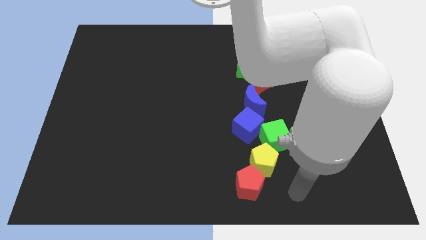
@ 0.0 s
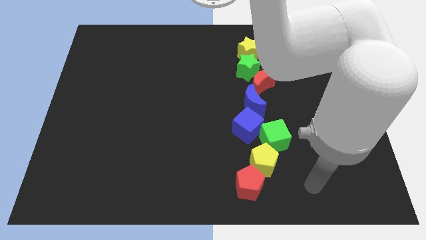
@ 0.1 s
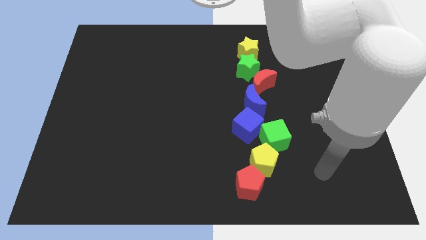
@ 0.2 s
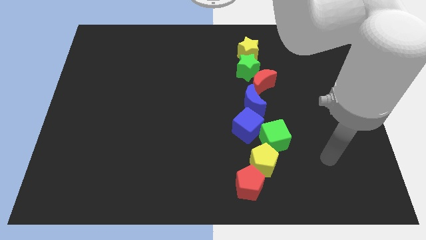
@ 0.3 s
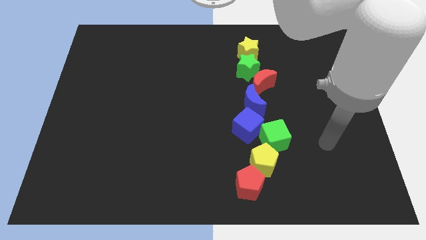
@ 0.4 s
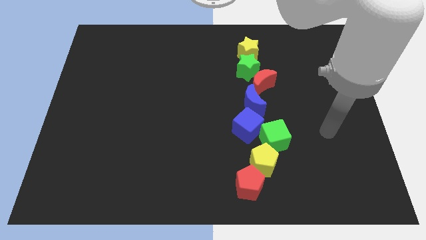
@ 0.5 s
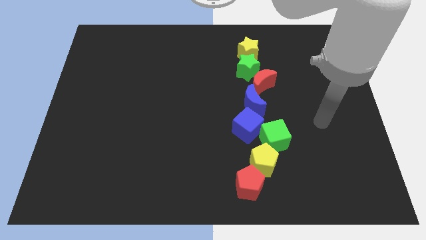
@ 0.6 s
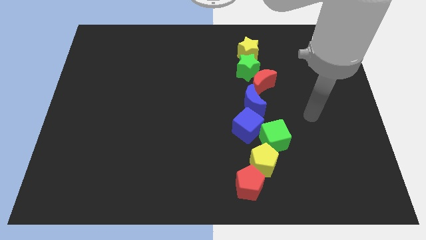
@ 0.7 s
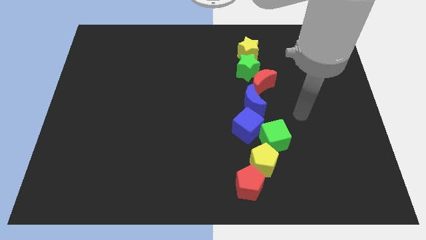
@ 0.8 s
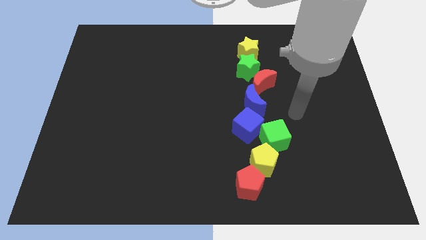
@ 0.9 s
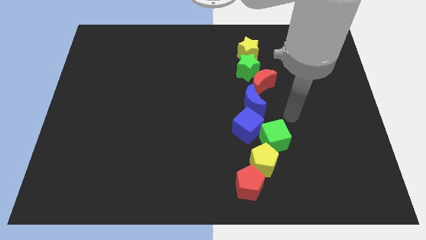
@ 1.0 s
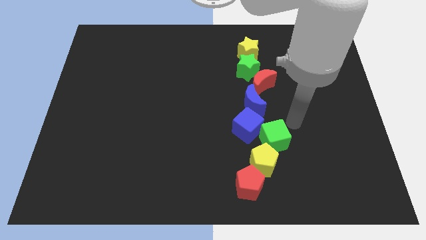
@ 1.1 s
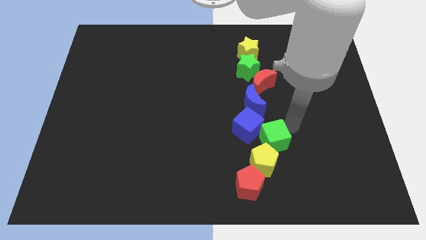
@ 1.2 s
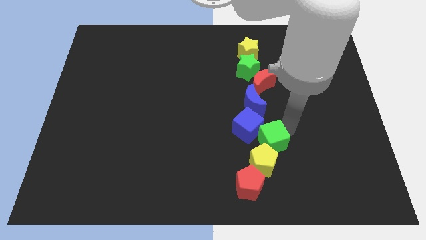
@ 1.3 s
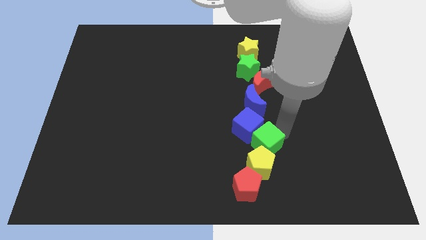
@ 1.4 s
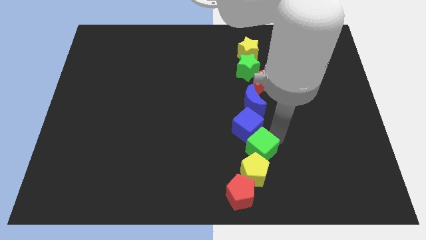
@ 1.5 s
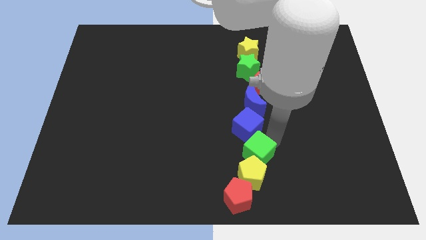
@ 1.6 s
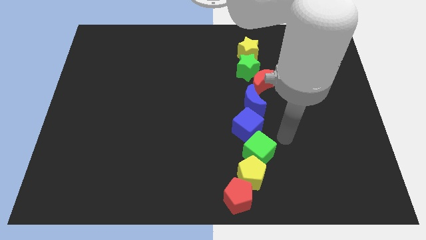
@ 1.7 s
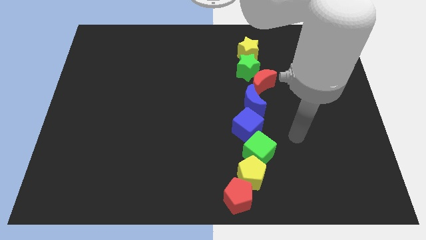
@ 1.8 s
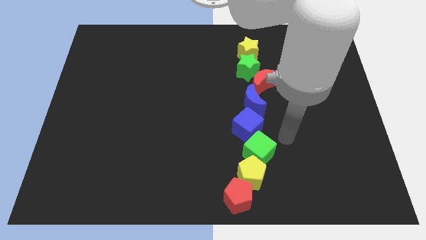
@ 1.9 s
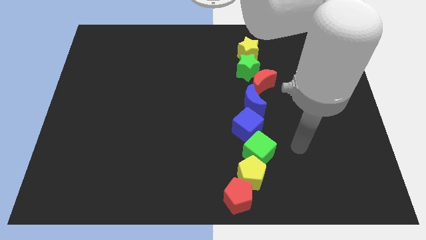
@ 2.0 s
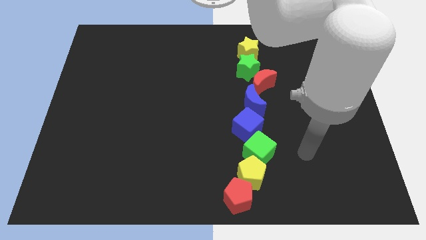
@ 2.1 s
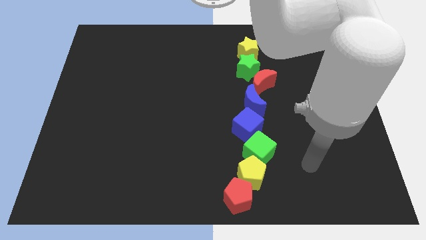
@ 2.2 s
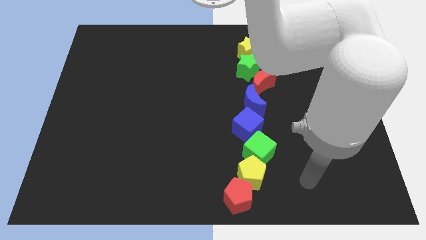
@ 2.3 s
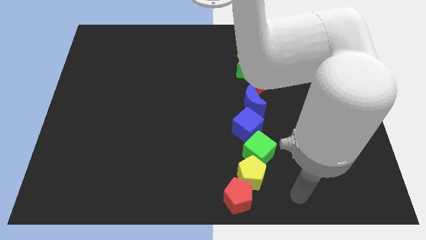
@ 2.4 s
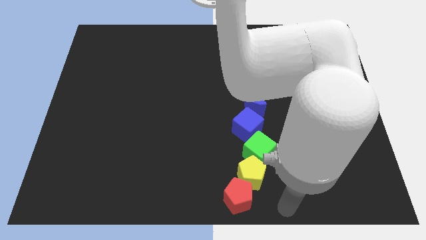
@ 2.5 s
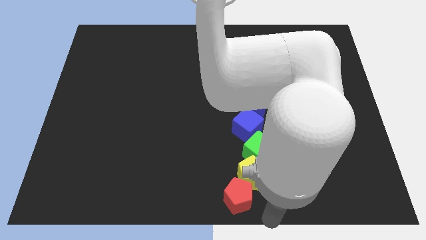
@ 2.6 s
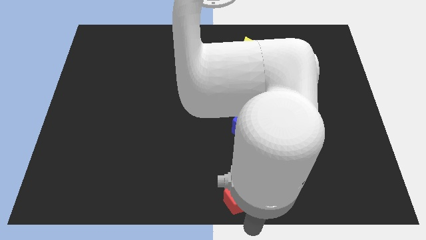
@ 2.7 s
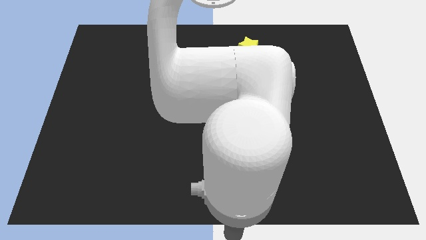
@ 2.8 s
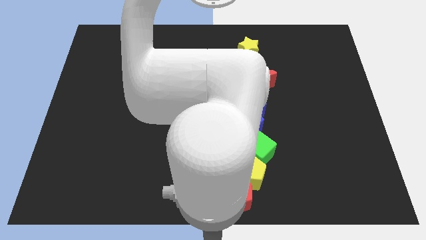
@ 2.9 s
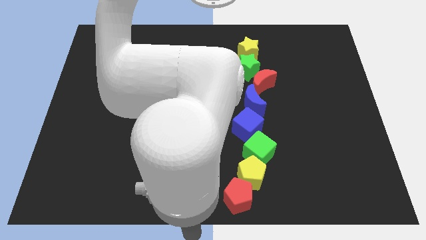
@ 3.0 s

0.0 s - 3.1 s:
move green cube and pentagons slightly down

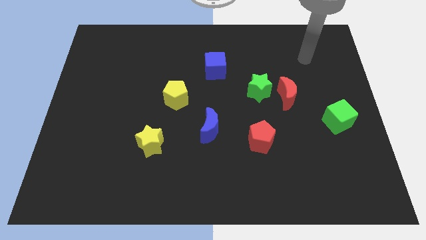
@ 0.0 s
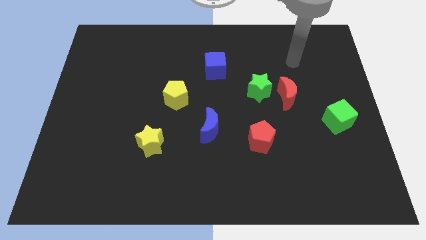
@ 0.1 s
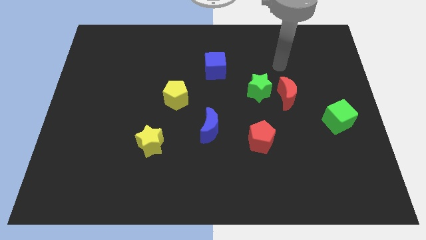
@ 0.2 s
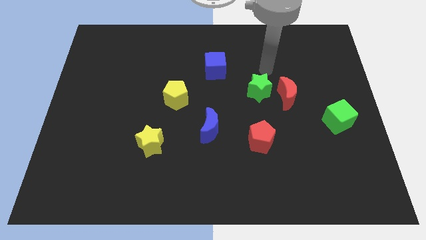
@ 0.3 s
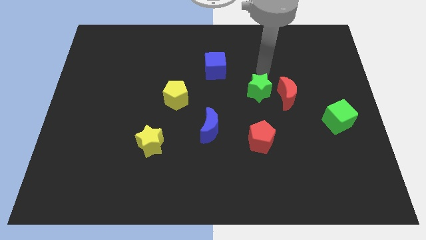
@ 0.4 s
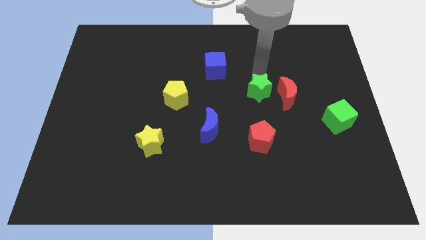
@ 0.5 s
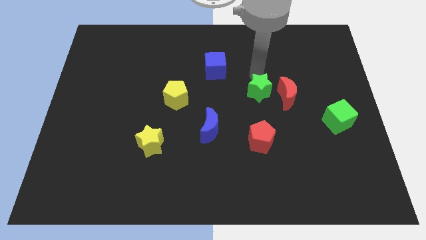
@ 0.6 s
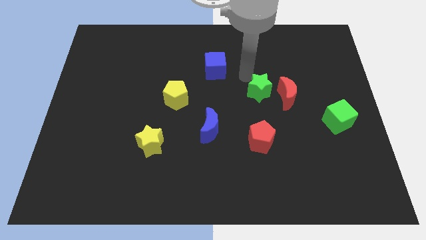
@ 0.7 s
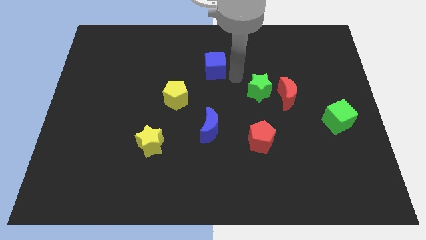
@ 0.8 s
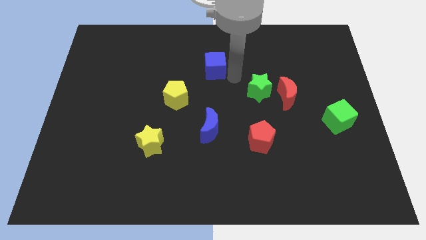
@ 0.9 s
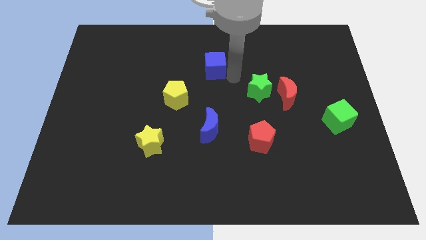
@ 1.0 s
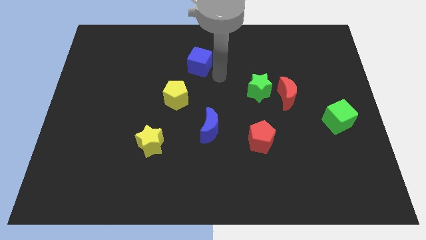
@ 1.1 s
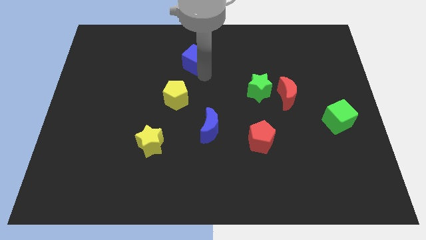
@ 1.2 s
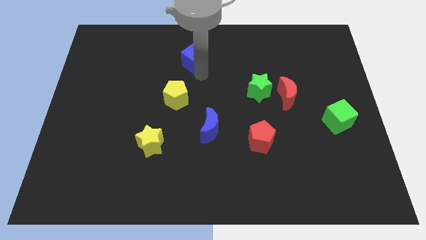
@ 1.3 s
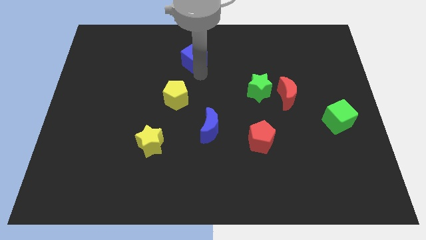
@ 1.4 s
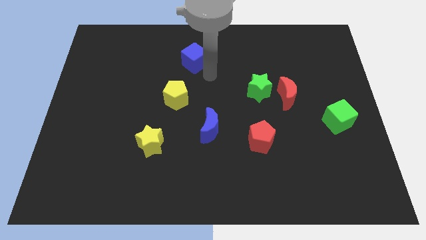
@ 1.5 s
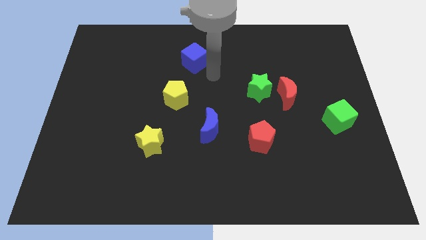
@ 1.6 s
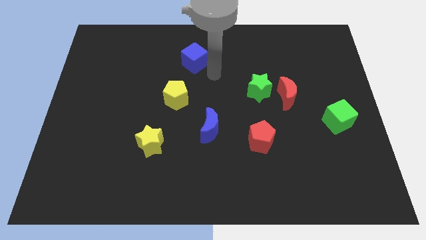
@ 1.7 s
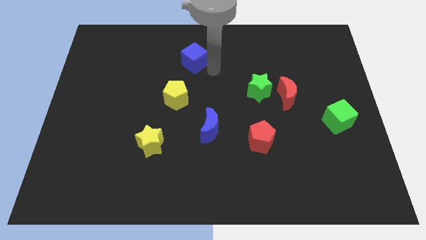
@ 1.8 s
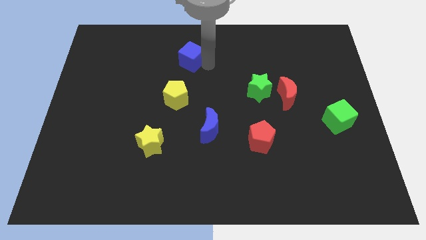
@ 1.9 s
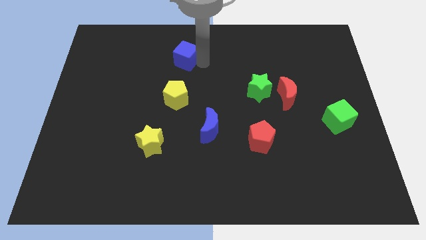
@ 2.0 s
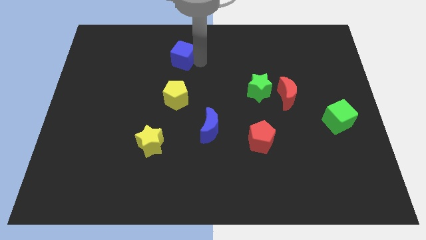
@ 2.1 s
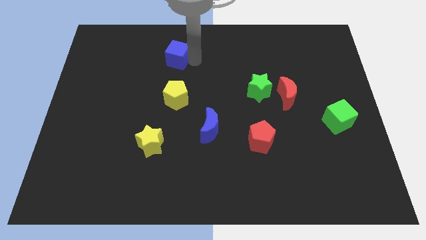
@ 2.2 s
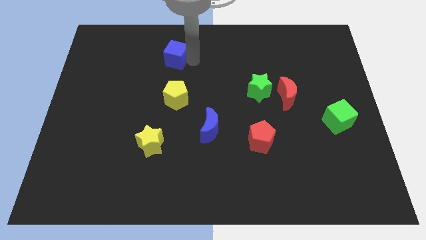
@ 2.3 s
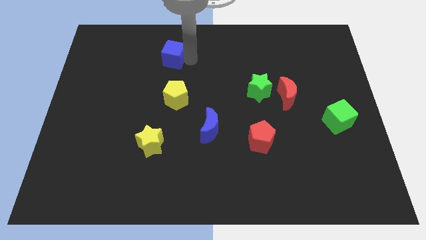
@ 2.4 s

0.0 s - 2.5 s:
place the blue cube vertically above the yellow pentagon

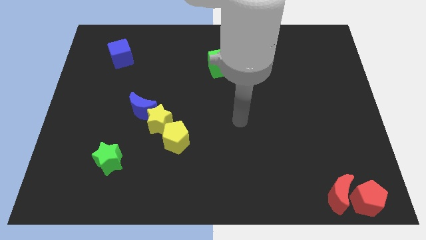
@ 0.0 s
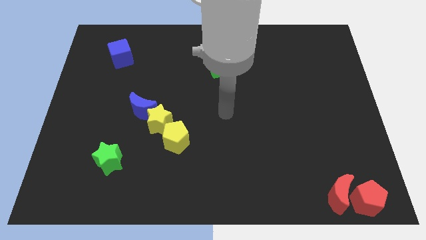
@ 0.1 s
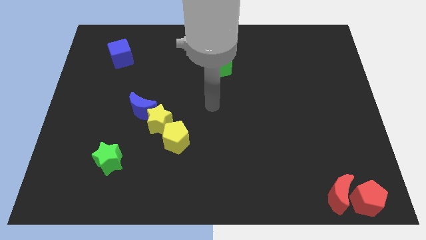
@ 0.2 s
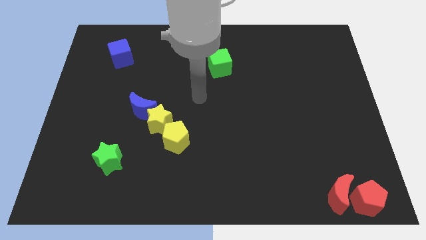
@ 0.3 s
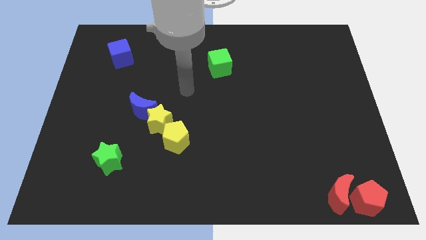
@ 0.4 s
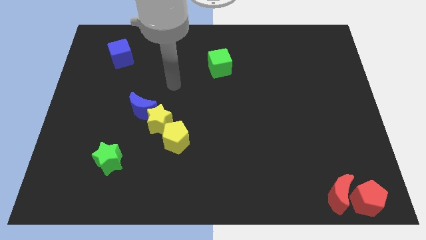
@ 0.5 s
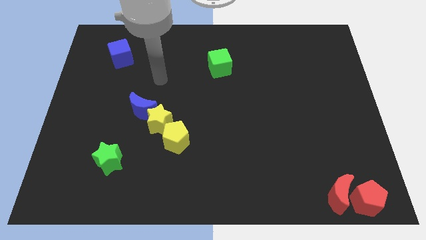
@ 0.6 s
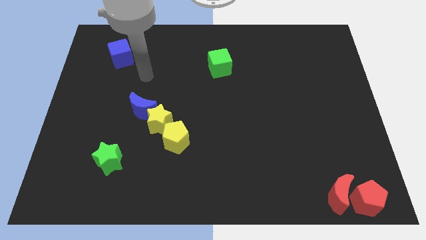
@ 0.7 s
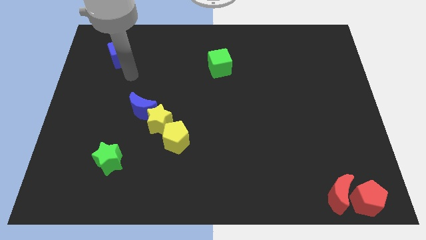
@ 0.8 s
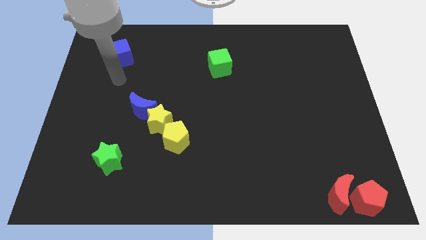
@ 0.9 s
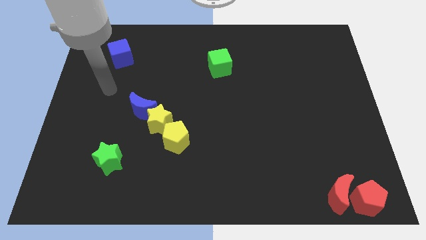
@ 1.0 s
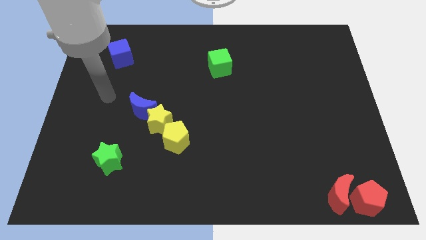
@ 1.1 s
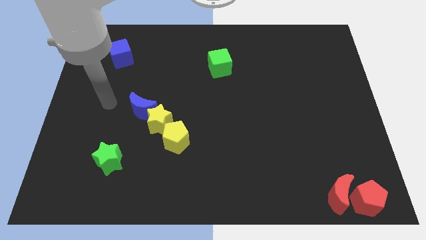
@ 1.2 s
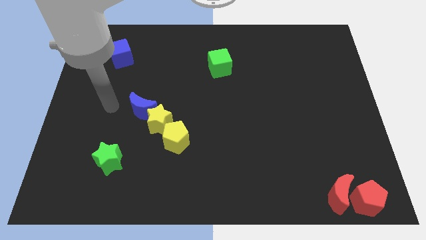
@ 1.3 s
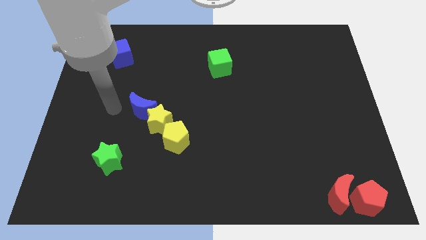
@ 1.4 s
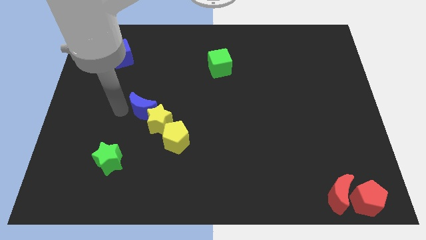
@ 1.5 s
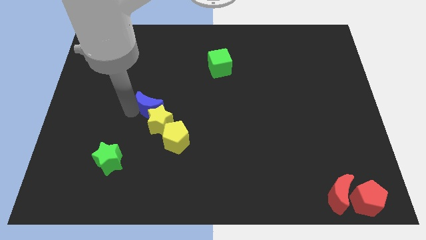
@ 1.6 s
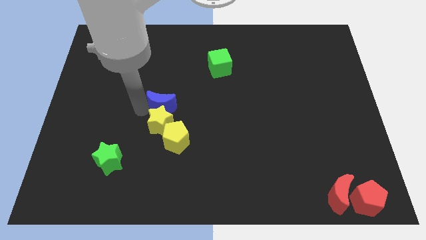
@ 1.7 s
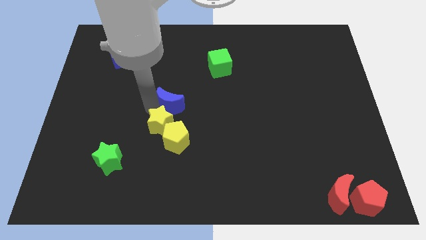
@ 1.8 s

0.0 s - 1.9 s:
move arm towards the blue crescent on the left center of the board

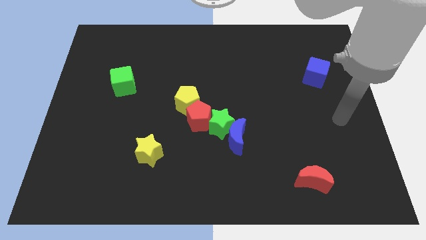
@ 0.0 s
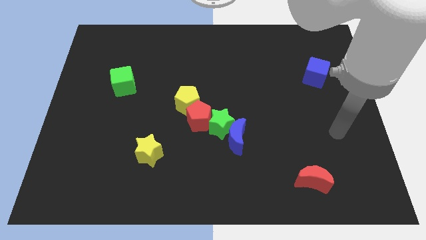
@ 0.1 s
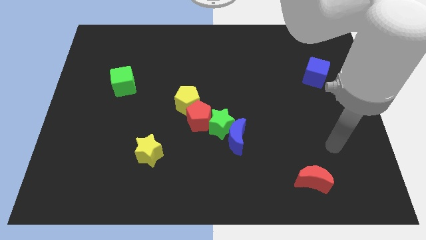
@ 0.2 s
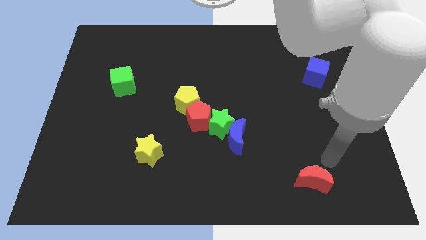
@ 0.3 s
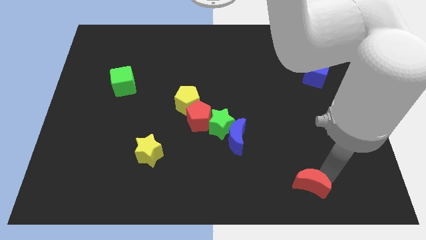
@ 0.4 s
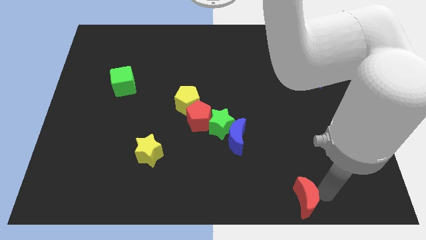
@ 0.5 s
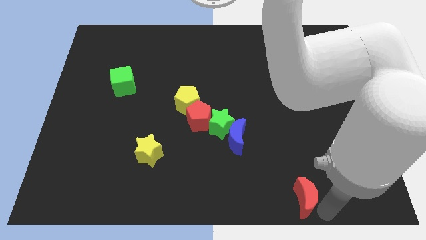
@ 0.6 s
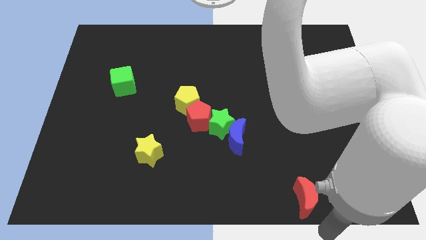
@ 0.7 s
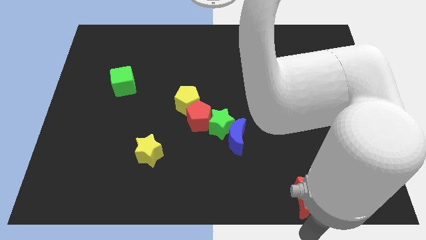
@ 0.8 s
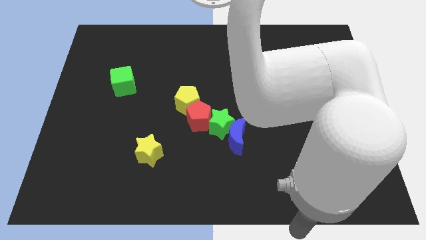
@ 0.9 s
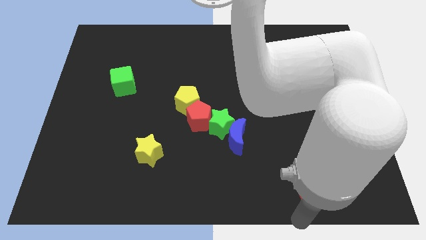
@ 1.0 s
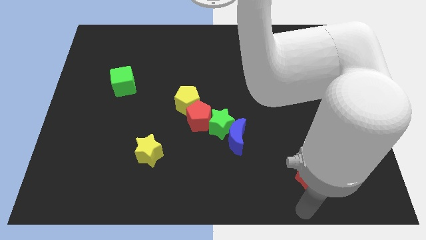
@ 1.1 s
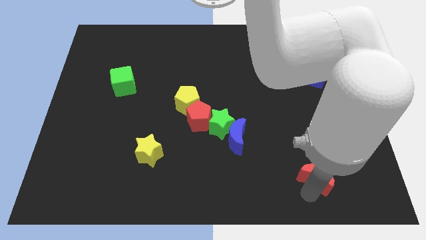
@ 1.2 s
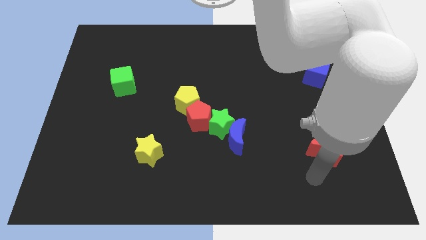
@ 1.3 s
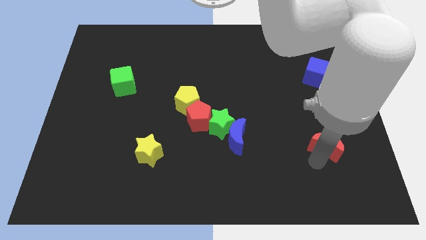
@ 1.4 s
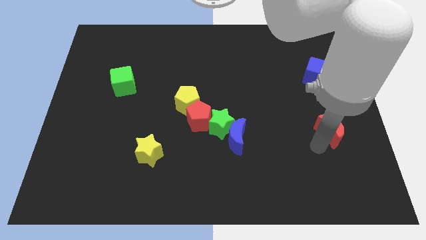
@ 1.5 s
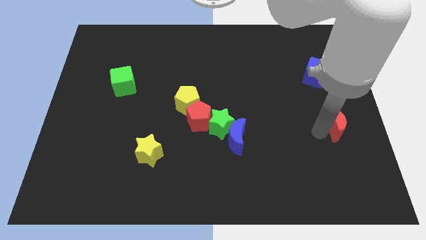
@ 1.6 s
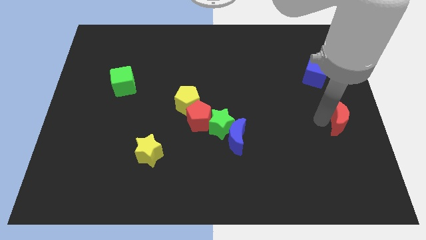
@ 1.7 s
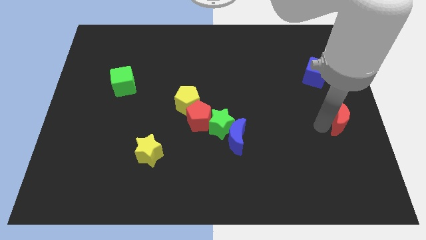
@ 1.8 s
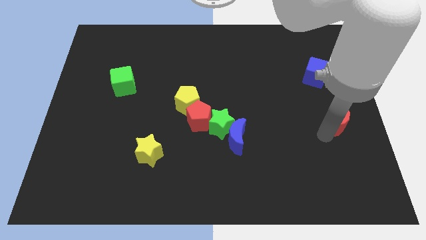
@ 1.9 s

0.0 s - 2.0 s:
move the red moon diagonally bottom right to the blue cube
